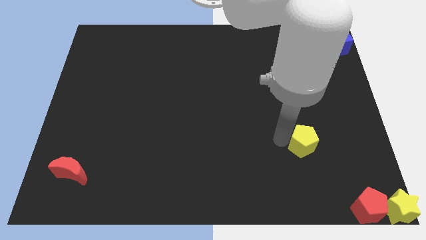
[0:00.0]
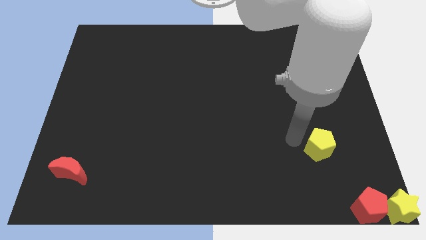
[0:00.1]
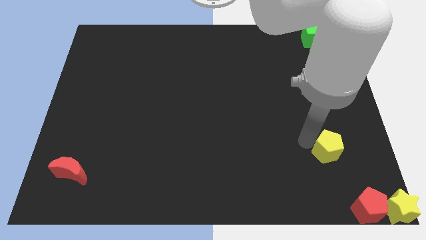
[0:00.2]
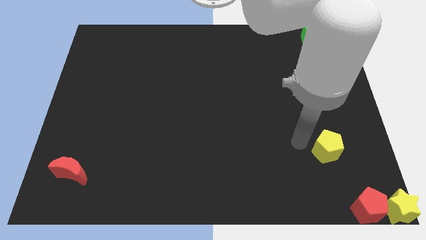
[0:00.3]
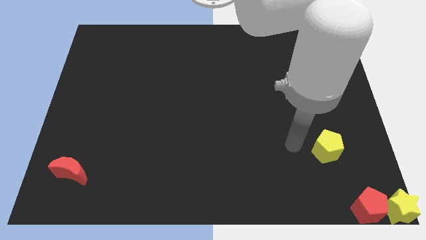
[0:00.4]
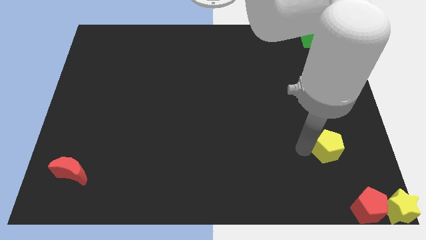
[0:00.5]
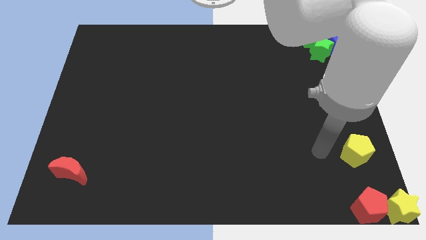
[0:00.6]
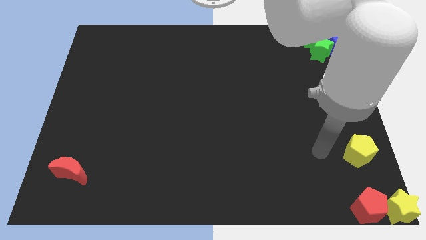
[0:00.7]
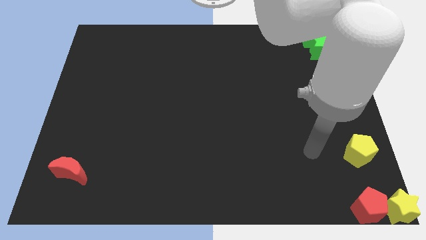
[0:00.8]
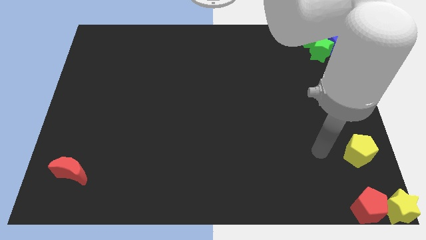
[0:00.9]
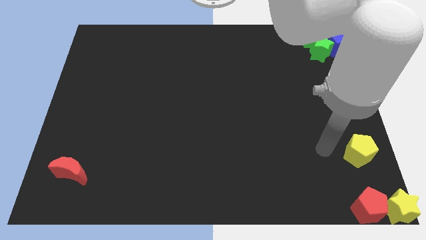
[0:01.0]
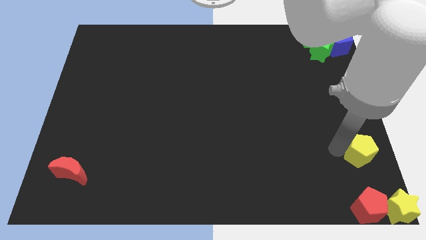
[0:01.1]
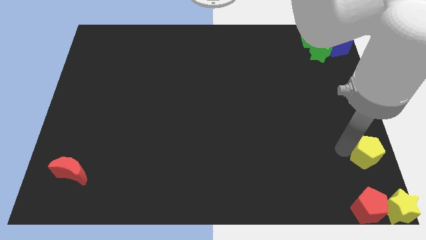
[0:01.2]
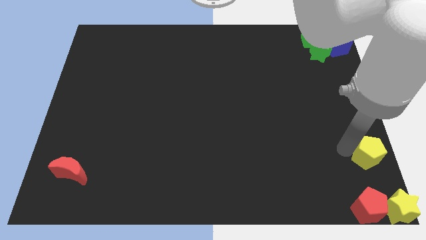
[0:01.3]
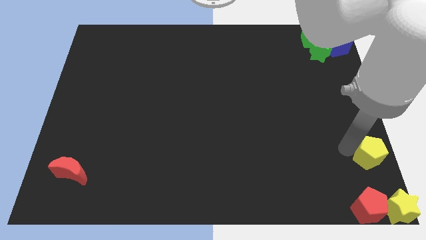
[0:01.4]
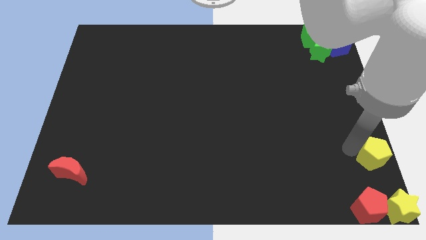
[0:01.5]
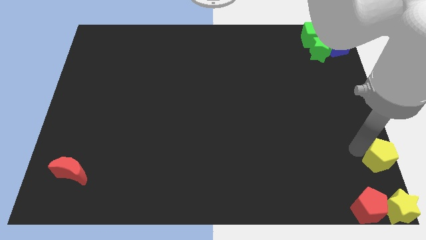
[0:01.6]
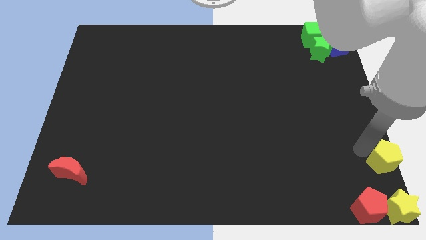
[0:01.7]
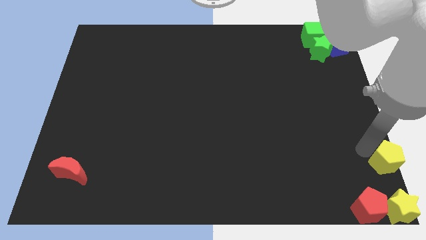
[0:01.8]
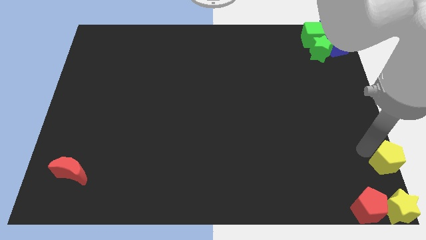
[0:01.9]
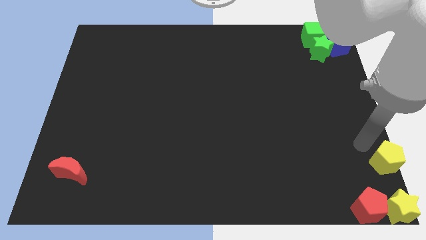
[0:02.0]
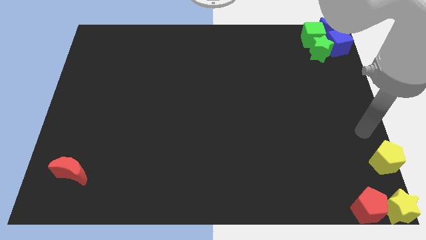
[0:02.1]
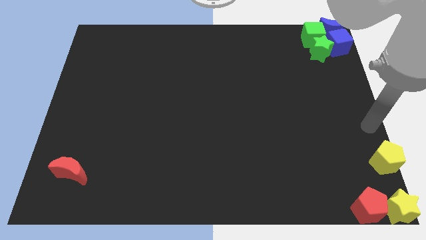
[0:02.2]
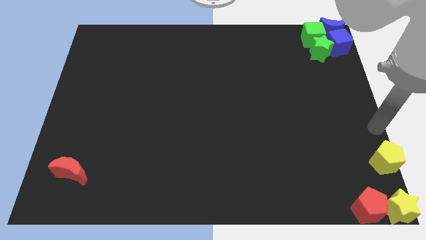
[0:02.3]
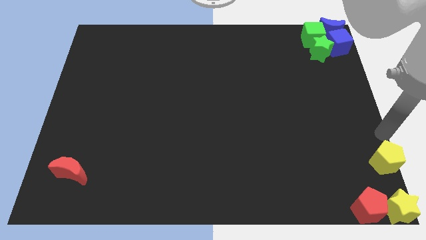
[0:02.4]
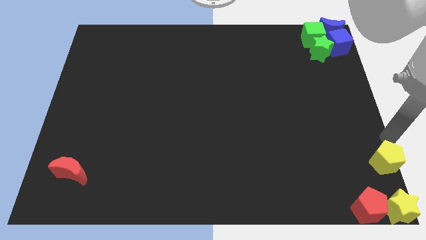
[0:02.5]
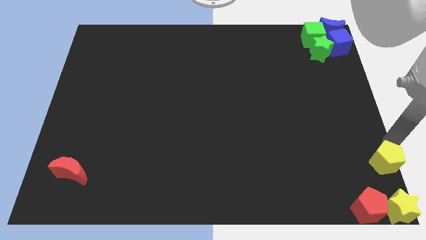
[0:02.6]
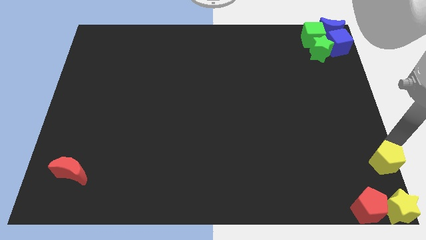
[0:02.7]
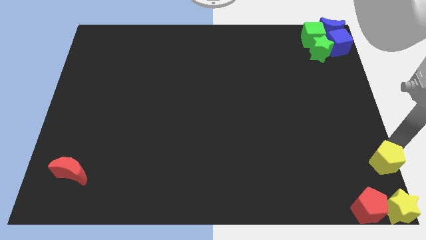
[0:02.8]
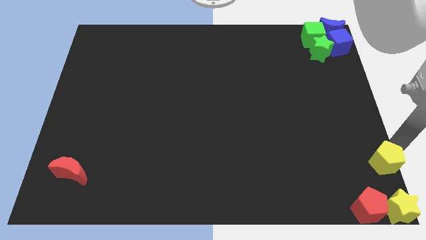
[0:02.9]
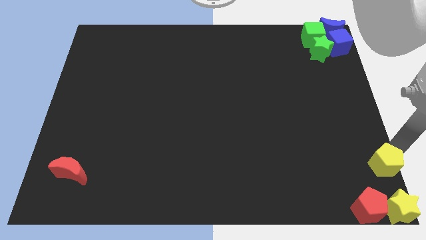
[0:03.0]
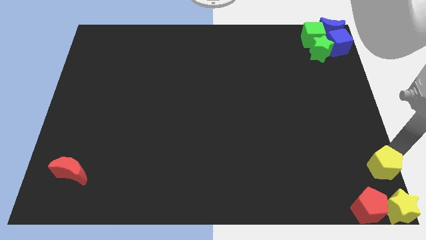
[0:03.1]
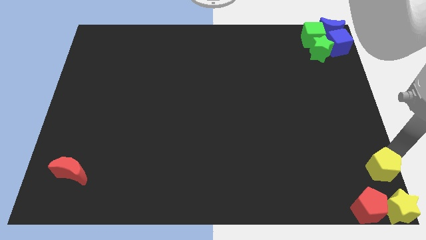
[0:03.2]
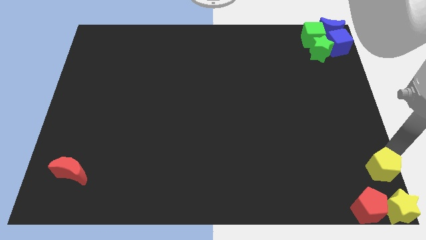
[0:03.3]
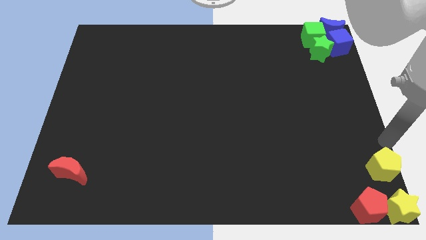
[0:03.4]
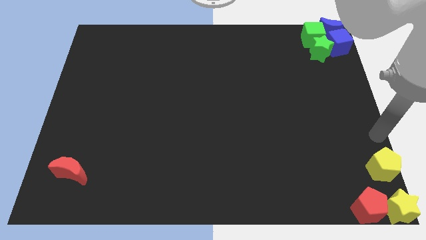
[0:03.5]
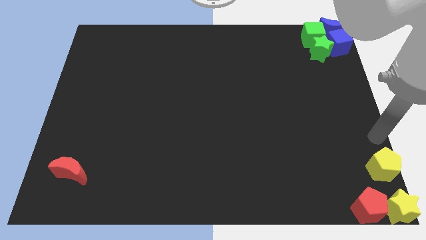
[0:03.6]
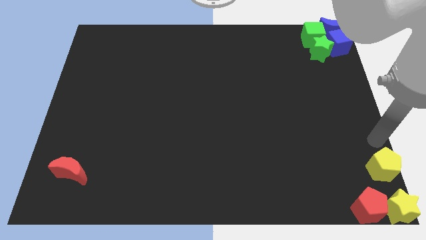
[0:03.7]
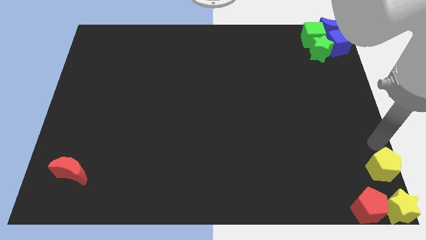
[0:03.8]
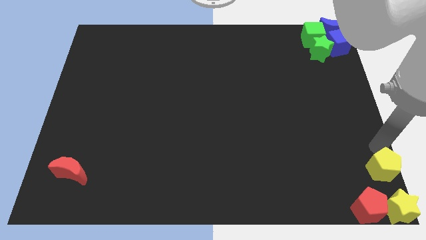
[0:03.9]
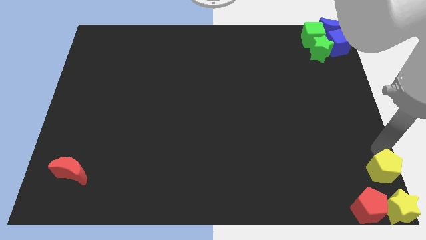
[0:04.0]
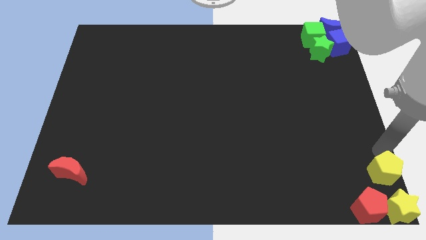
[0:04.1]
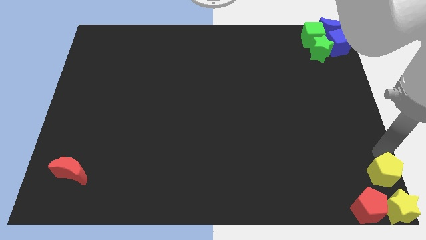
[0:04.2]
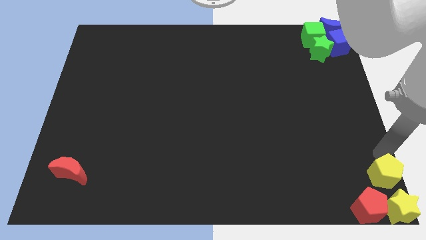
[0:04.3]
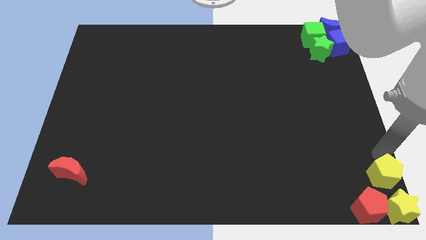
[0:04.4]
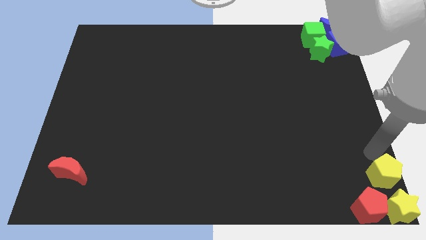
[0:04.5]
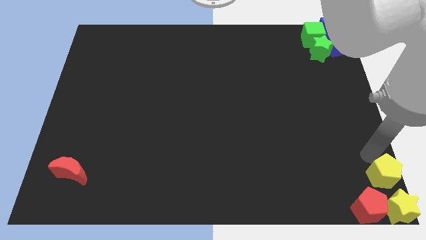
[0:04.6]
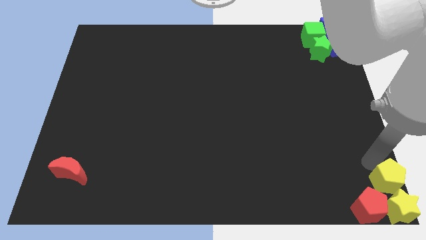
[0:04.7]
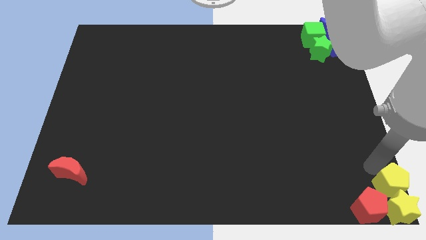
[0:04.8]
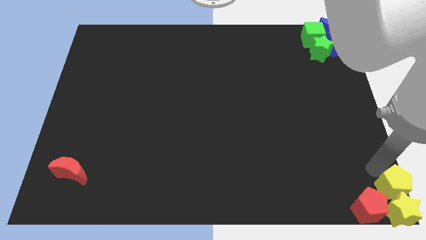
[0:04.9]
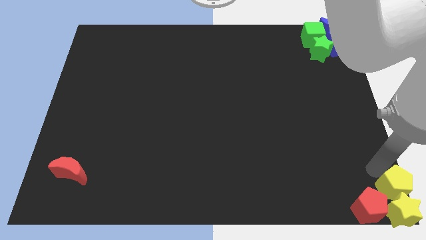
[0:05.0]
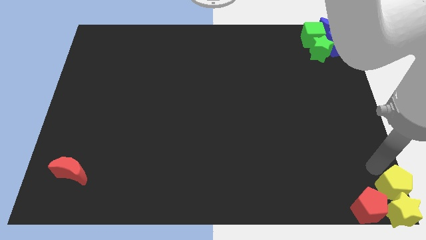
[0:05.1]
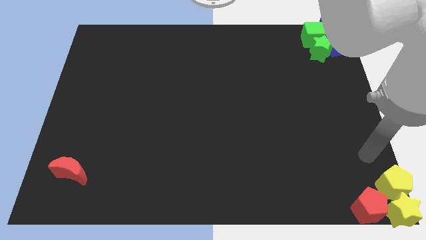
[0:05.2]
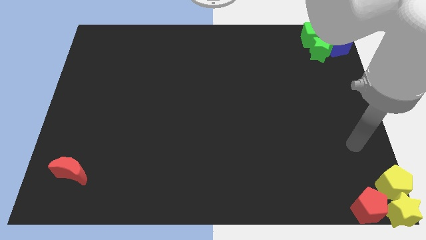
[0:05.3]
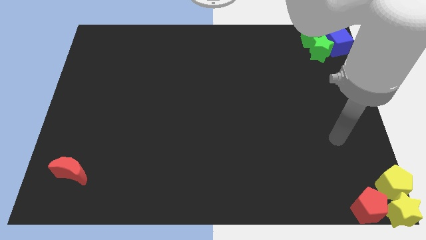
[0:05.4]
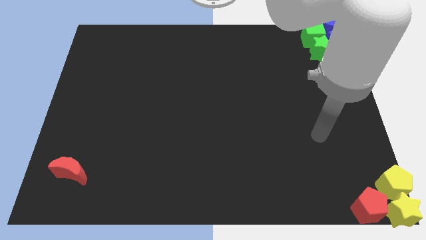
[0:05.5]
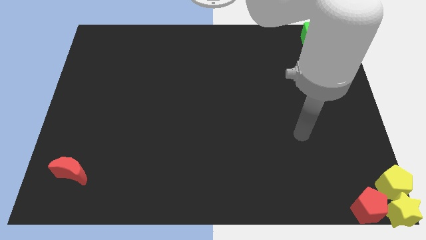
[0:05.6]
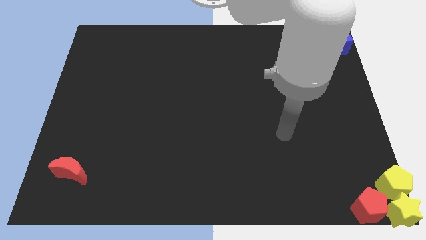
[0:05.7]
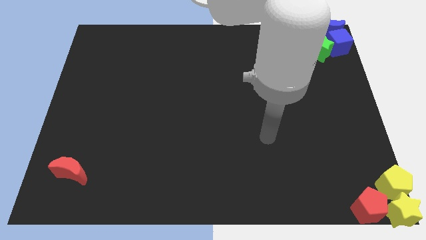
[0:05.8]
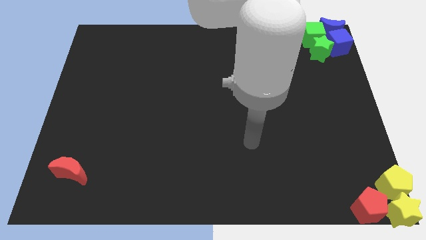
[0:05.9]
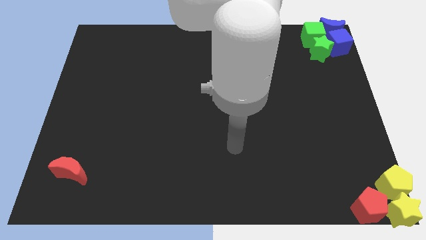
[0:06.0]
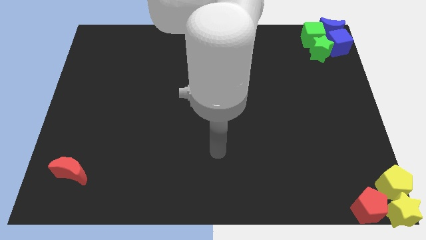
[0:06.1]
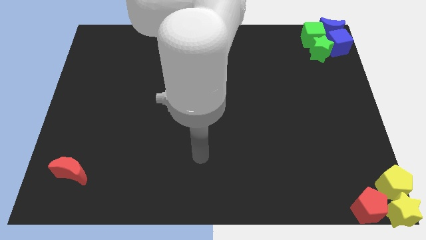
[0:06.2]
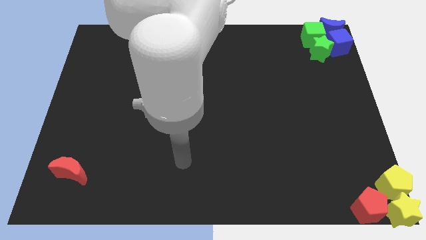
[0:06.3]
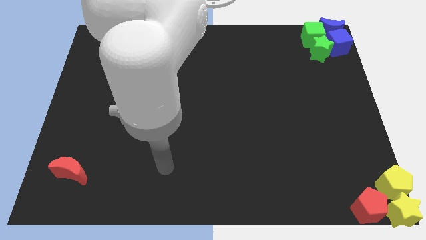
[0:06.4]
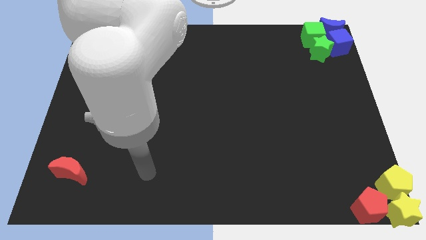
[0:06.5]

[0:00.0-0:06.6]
push the yellow pentagon into the yellow star

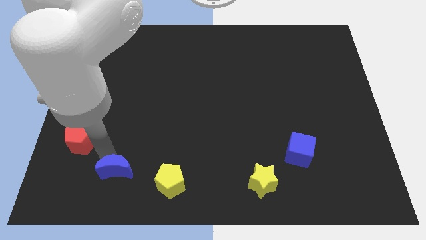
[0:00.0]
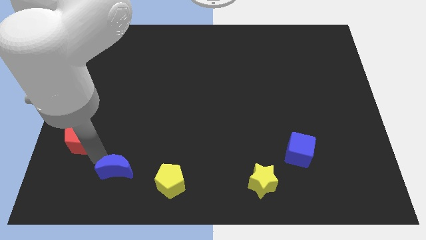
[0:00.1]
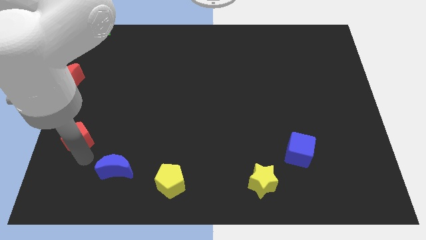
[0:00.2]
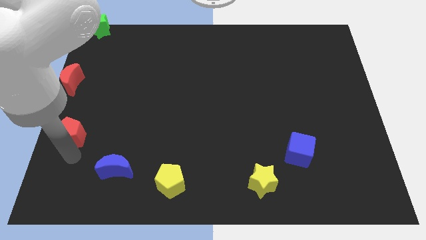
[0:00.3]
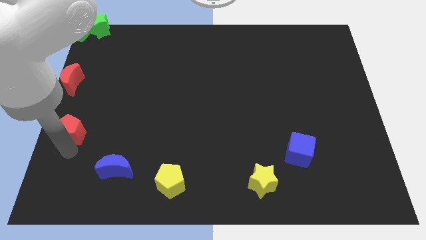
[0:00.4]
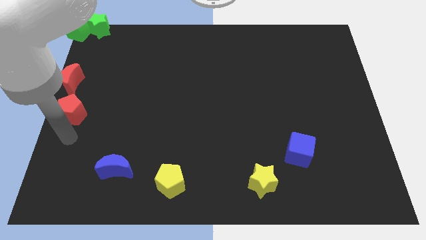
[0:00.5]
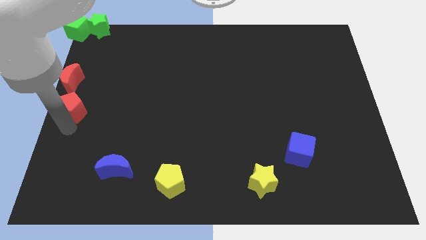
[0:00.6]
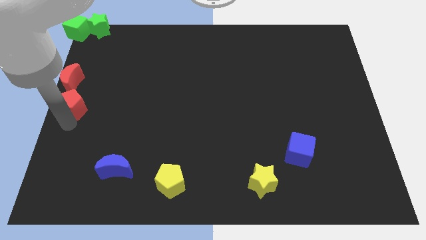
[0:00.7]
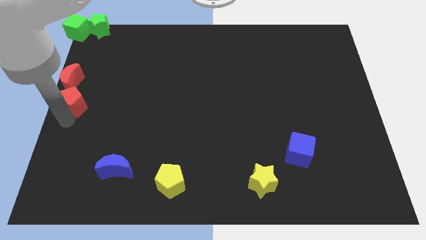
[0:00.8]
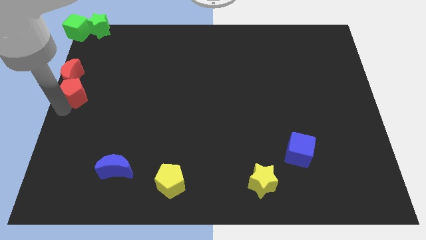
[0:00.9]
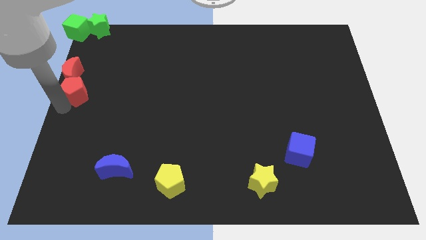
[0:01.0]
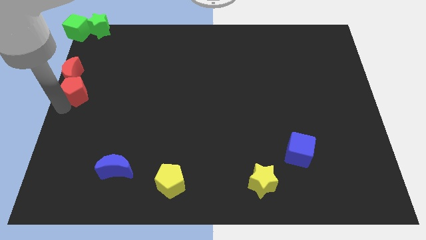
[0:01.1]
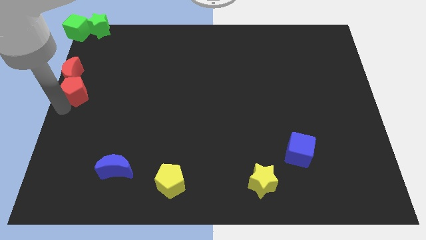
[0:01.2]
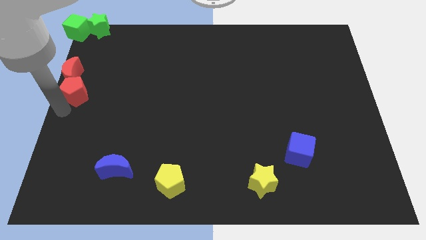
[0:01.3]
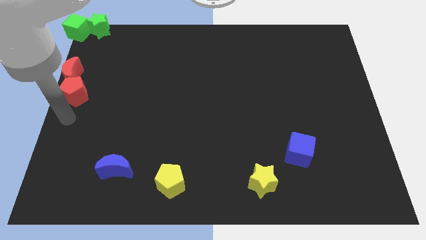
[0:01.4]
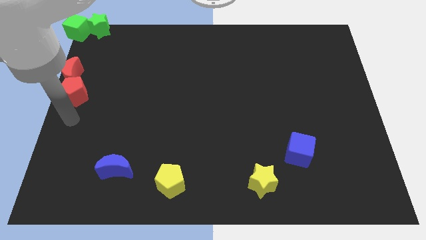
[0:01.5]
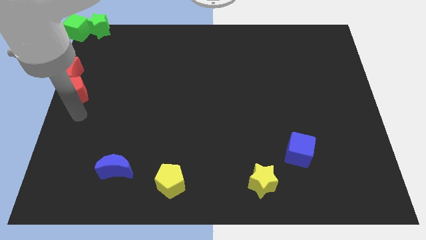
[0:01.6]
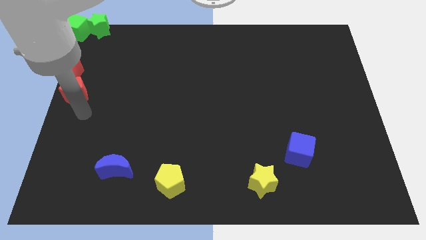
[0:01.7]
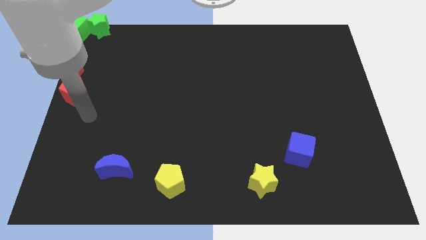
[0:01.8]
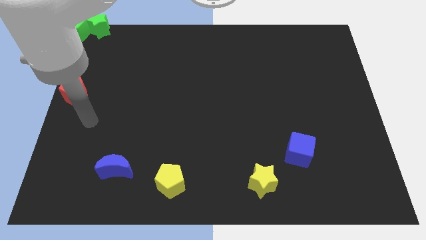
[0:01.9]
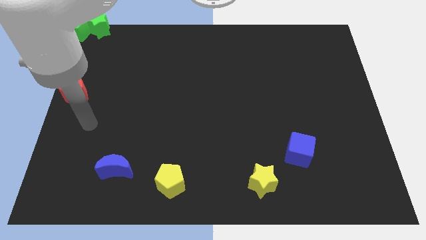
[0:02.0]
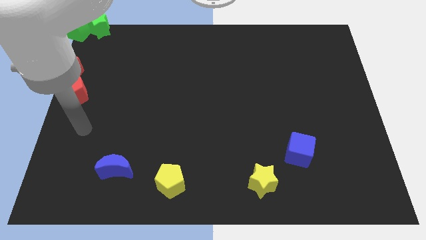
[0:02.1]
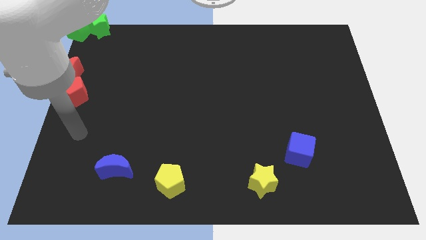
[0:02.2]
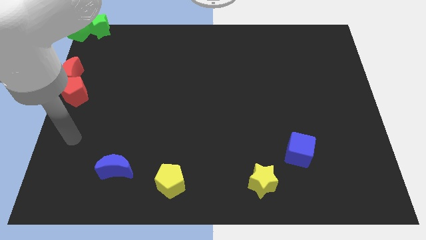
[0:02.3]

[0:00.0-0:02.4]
push the red penatgon into red moon
